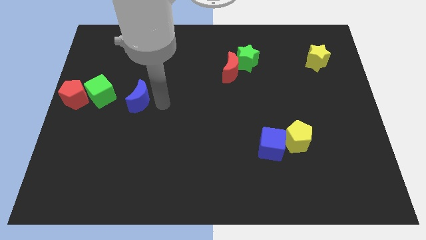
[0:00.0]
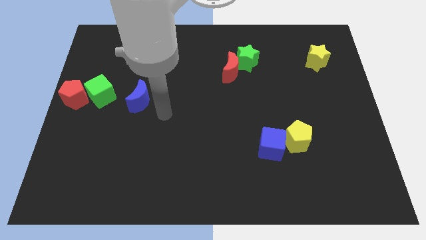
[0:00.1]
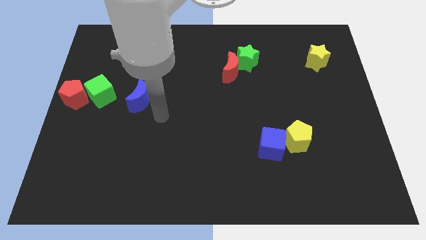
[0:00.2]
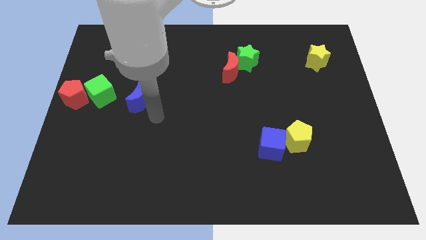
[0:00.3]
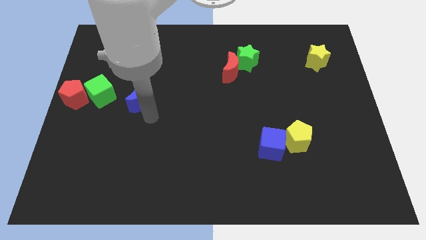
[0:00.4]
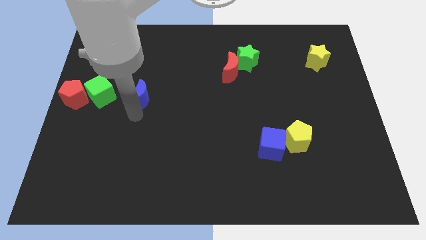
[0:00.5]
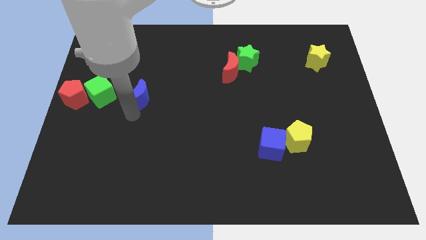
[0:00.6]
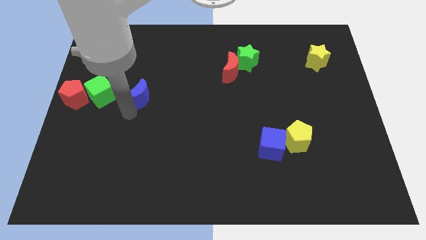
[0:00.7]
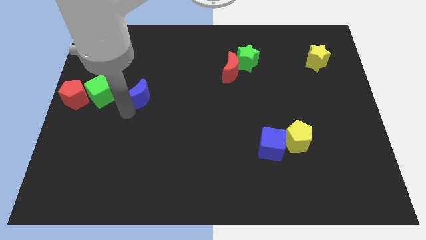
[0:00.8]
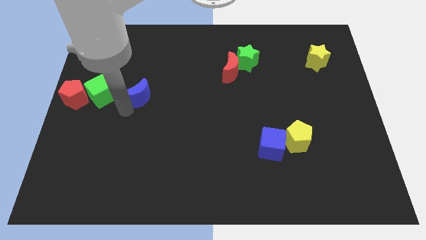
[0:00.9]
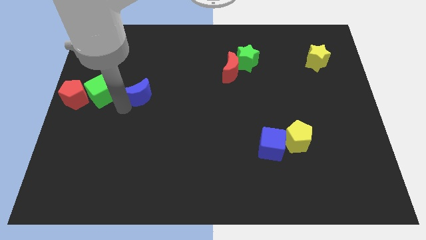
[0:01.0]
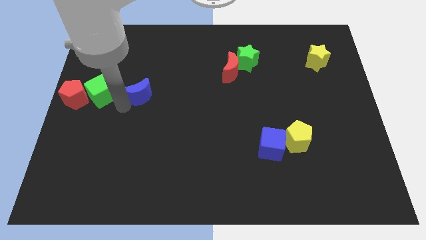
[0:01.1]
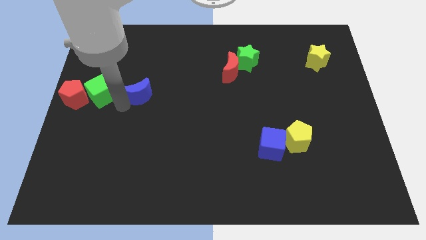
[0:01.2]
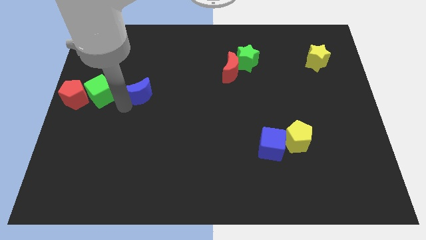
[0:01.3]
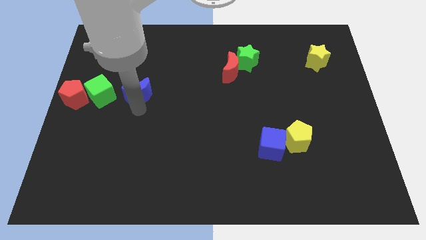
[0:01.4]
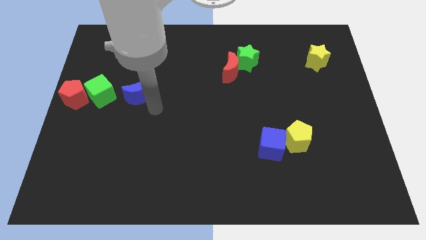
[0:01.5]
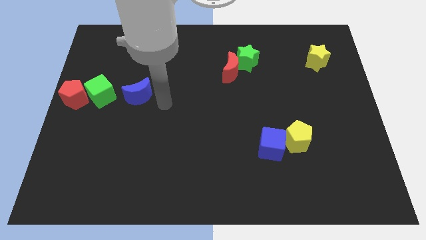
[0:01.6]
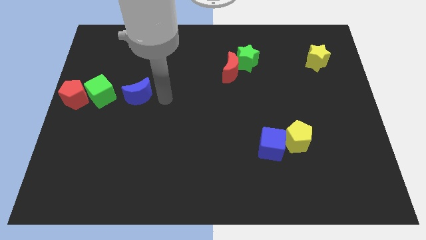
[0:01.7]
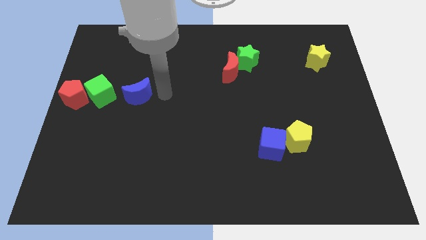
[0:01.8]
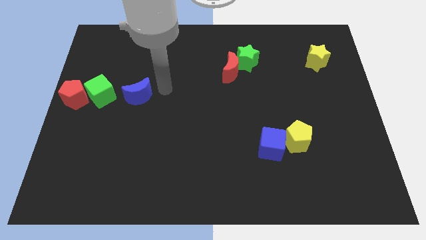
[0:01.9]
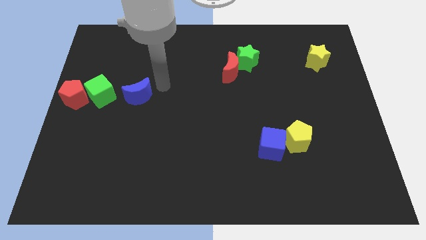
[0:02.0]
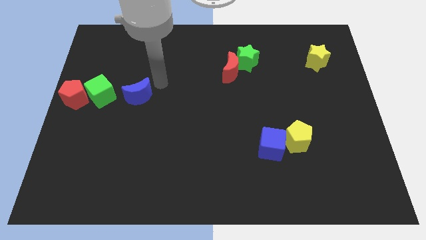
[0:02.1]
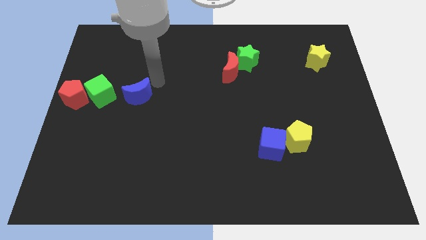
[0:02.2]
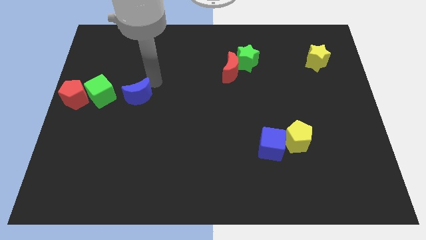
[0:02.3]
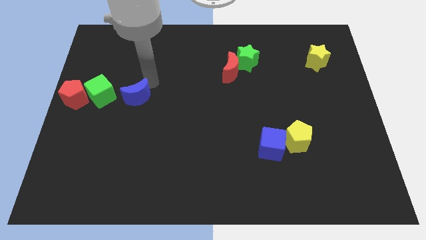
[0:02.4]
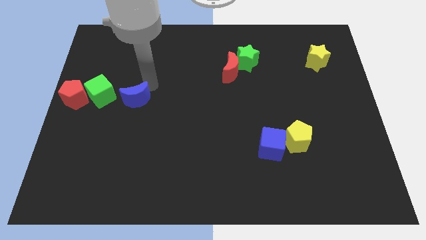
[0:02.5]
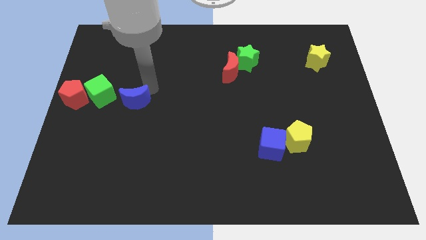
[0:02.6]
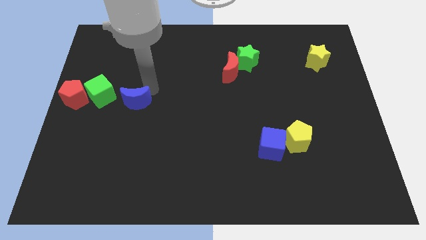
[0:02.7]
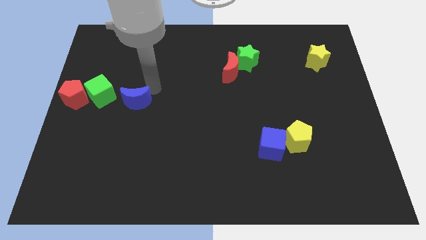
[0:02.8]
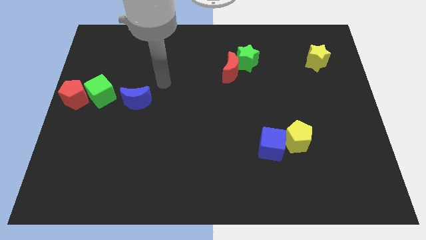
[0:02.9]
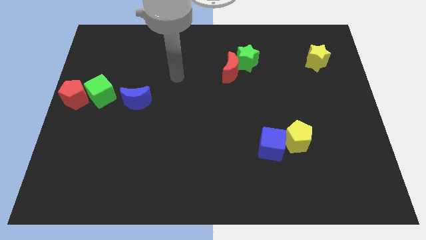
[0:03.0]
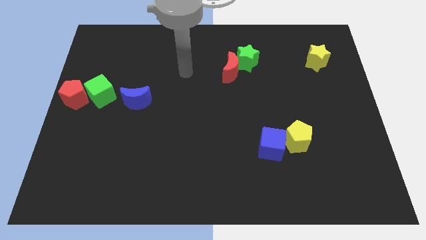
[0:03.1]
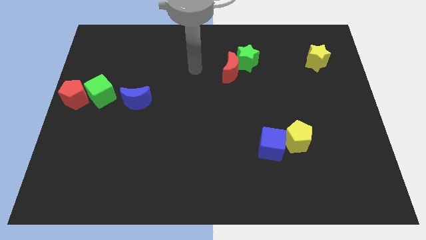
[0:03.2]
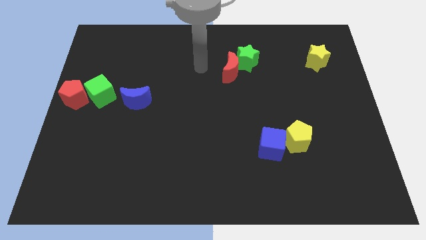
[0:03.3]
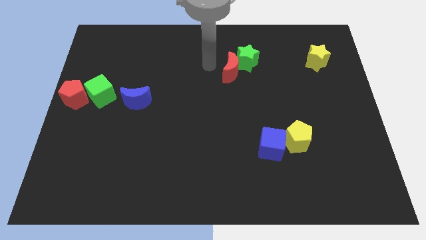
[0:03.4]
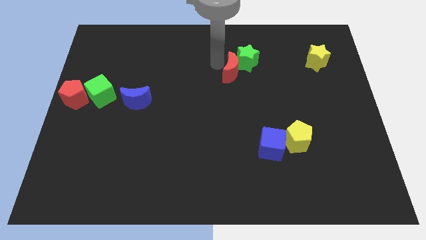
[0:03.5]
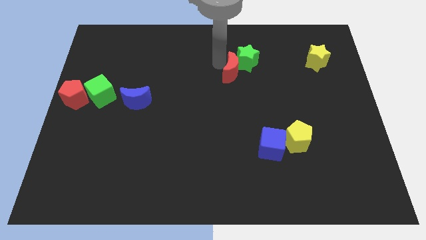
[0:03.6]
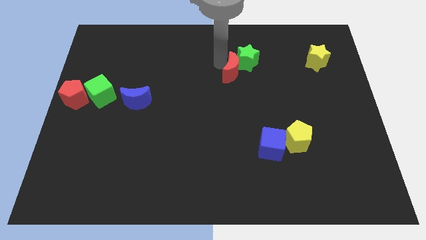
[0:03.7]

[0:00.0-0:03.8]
adjust the blue crescent properly to the right side of the green cube

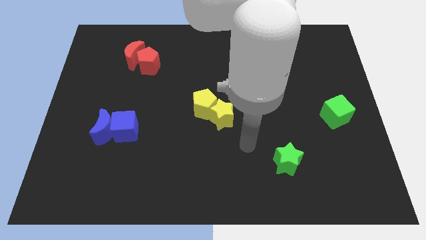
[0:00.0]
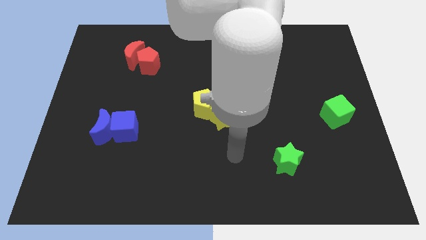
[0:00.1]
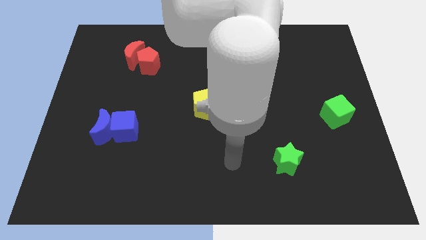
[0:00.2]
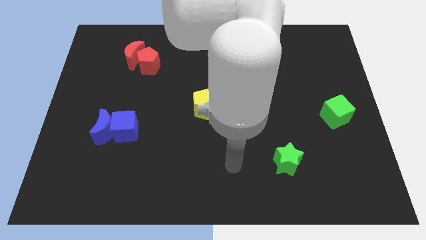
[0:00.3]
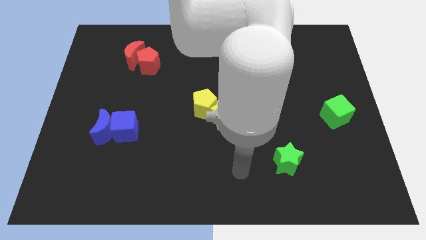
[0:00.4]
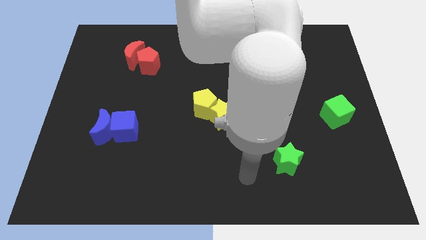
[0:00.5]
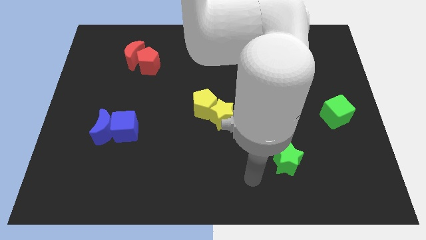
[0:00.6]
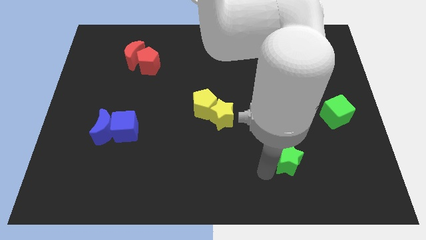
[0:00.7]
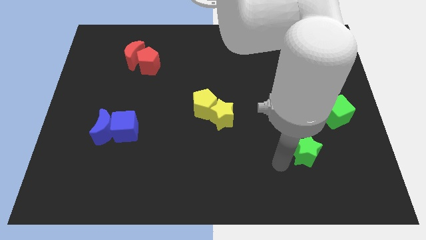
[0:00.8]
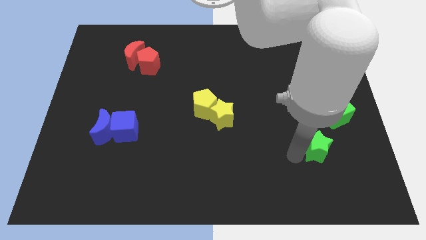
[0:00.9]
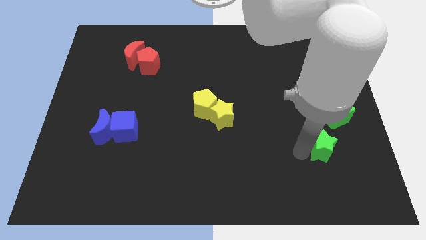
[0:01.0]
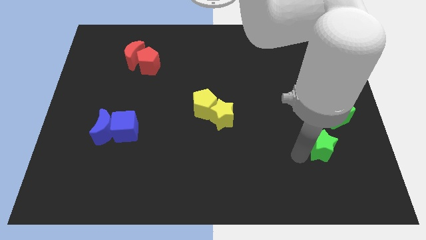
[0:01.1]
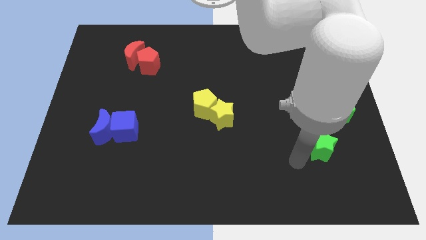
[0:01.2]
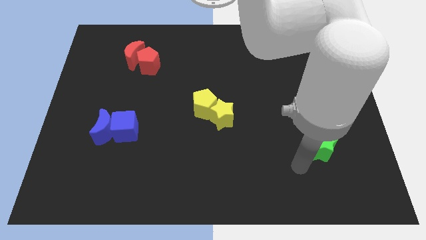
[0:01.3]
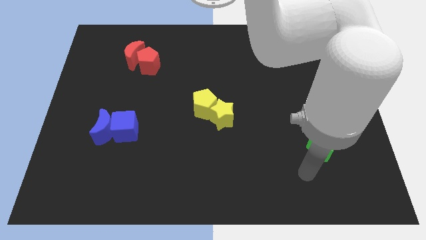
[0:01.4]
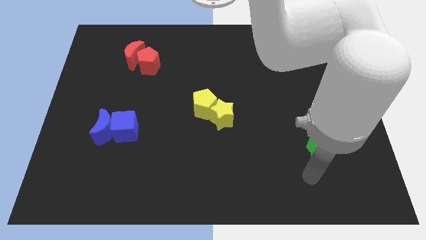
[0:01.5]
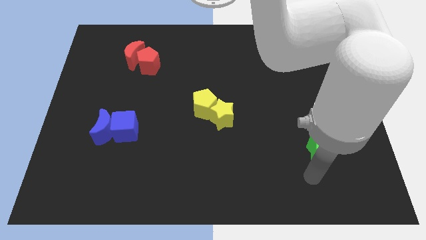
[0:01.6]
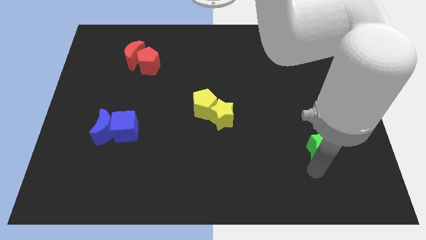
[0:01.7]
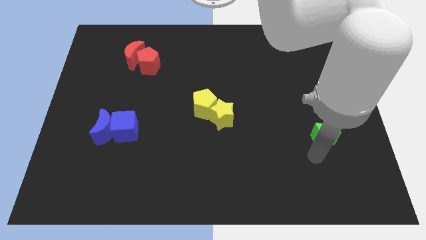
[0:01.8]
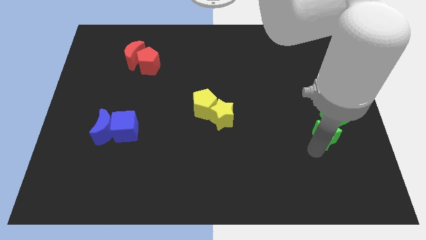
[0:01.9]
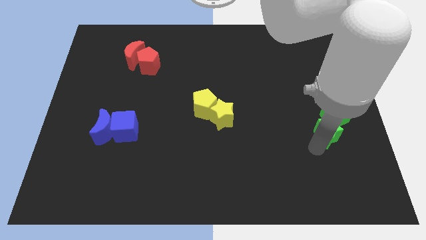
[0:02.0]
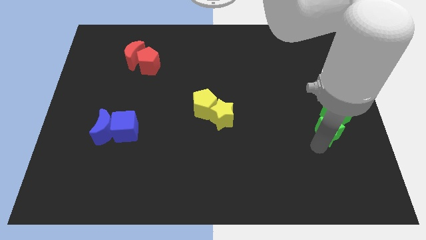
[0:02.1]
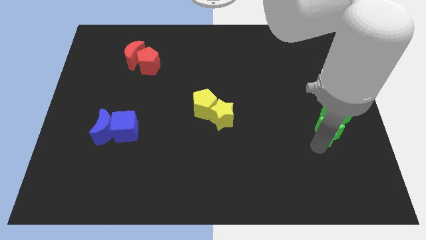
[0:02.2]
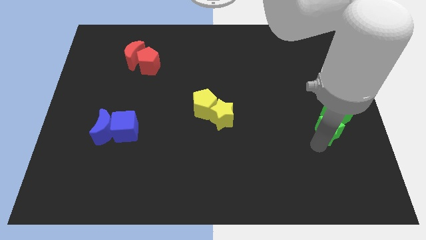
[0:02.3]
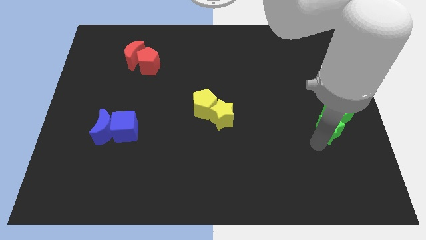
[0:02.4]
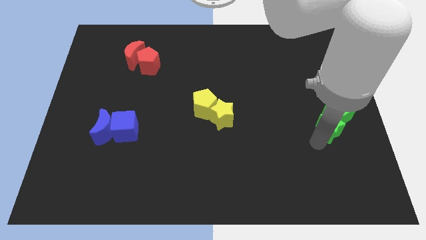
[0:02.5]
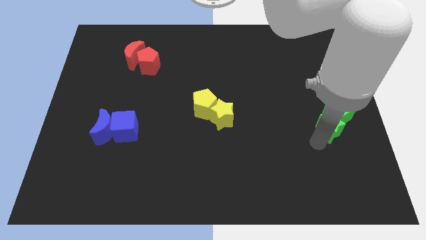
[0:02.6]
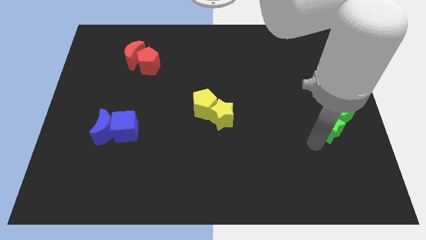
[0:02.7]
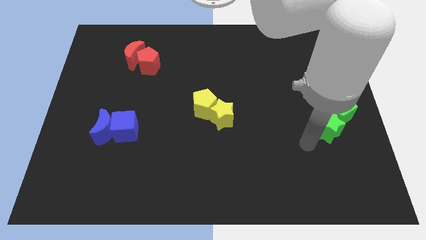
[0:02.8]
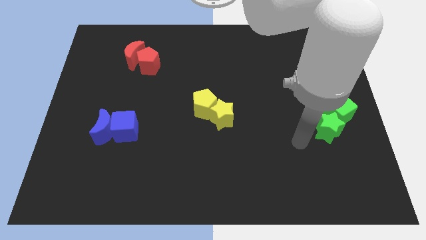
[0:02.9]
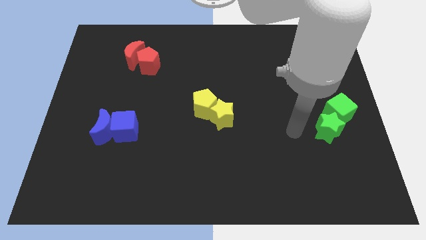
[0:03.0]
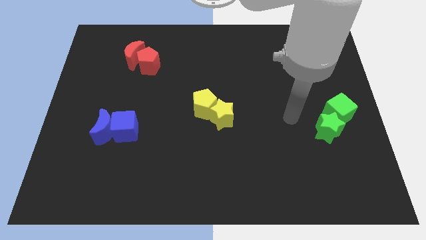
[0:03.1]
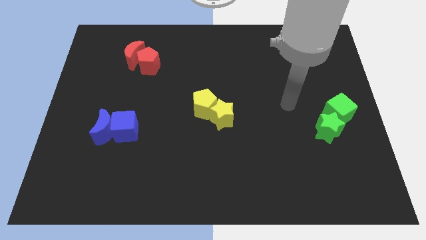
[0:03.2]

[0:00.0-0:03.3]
push the green star into the green cube

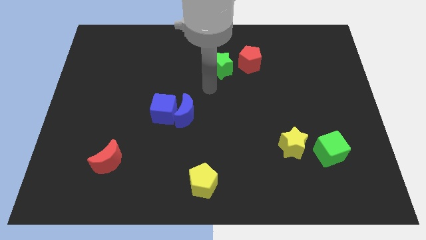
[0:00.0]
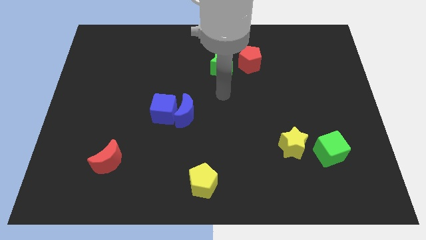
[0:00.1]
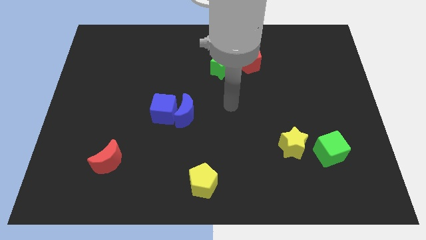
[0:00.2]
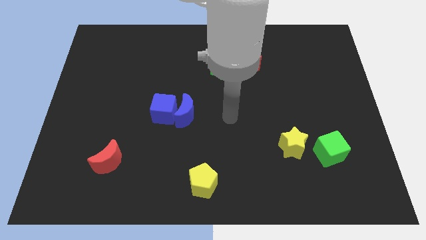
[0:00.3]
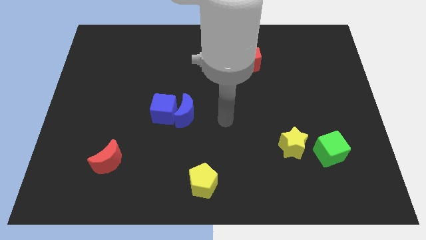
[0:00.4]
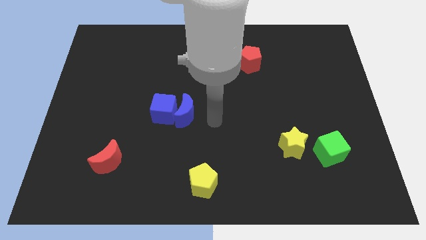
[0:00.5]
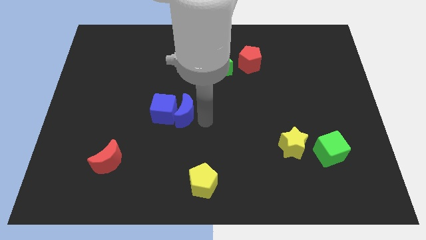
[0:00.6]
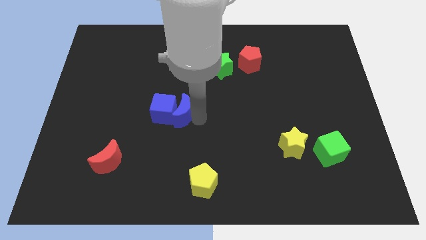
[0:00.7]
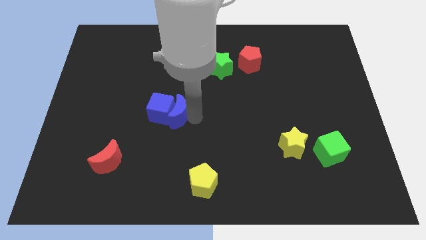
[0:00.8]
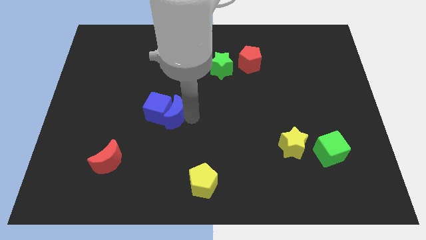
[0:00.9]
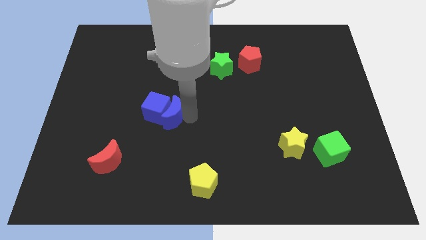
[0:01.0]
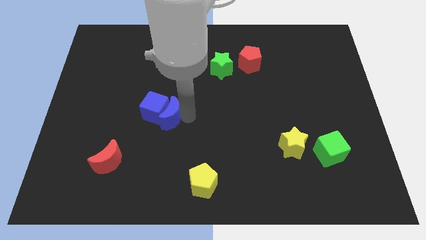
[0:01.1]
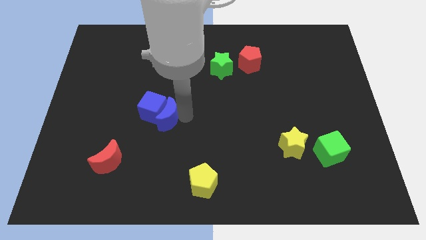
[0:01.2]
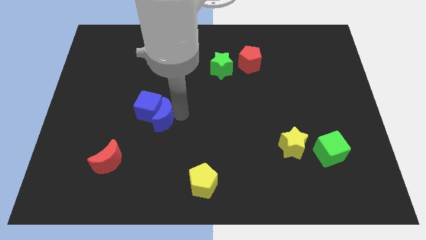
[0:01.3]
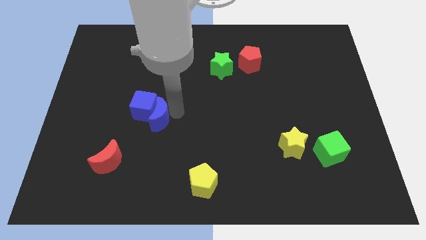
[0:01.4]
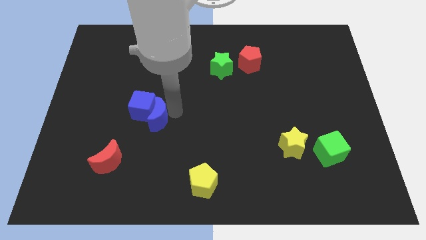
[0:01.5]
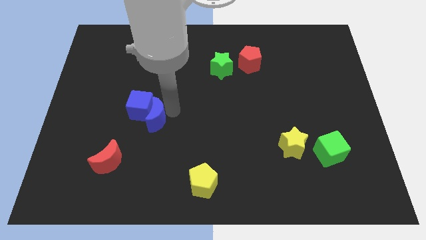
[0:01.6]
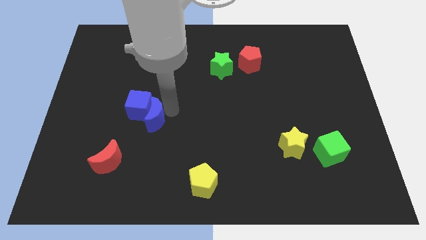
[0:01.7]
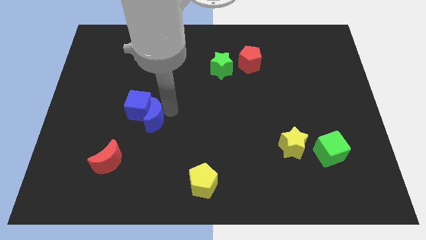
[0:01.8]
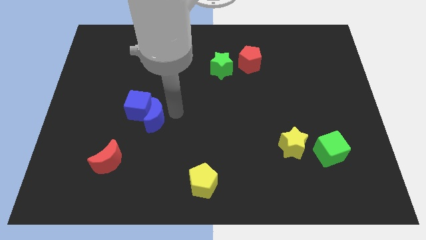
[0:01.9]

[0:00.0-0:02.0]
move the blue moon towards the center left slightly
